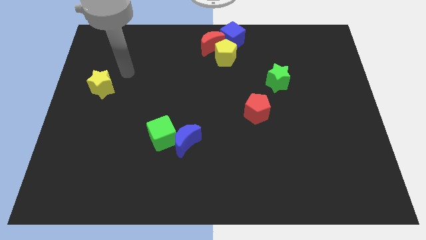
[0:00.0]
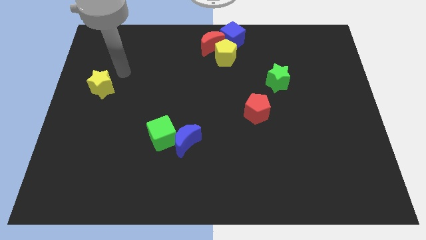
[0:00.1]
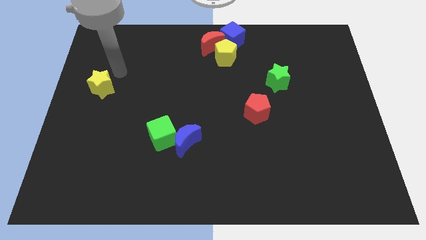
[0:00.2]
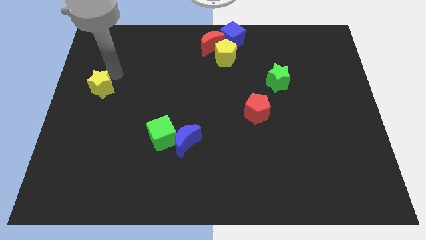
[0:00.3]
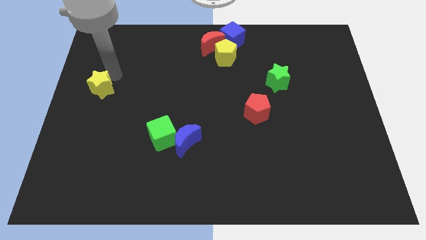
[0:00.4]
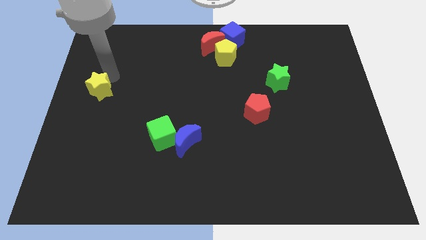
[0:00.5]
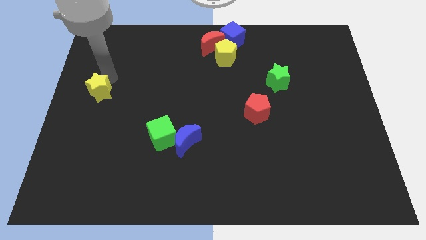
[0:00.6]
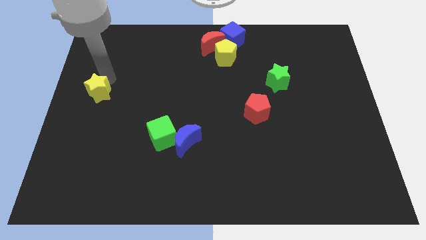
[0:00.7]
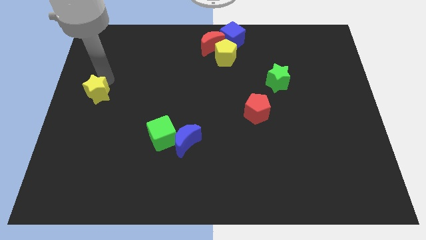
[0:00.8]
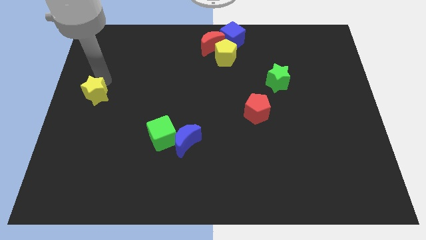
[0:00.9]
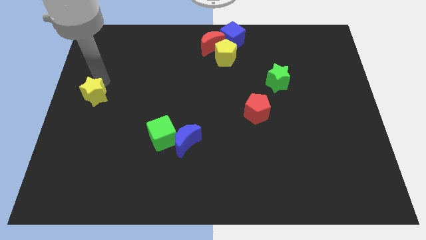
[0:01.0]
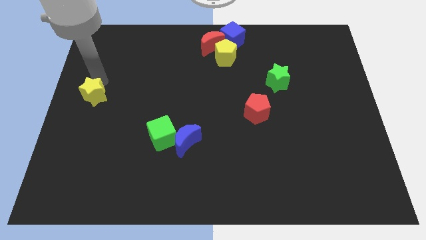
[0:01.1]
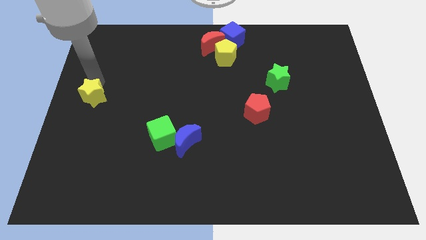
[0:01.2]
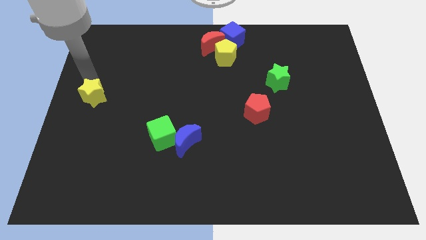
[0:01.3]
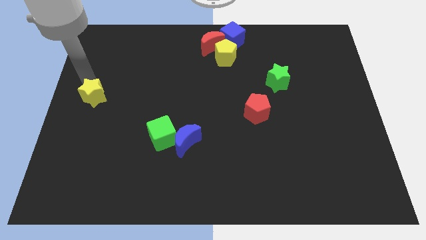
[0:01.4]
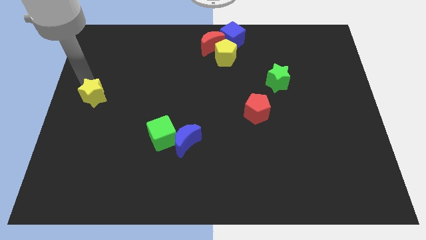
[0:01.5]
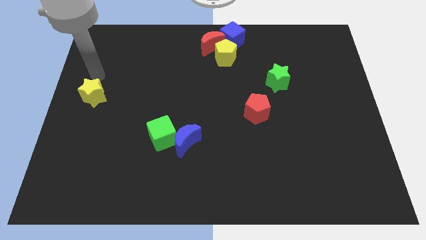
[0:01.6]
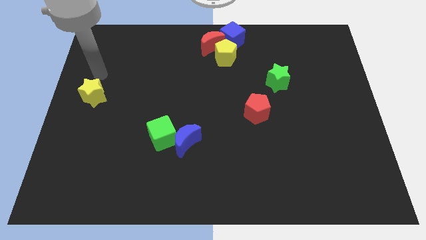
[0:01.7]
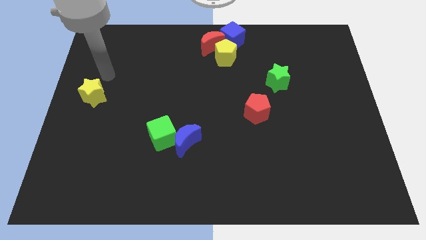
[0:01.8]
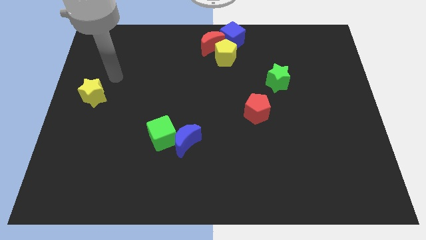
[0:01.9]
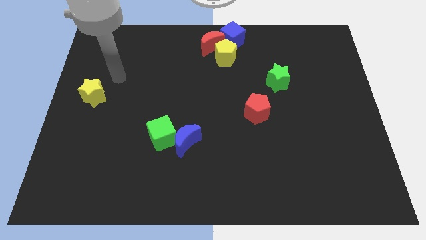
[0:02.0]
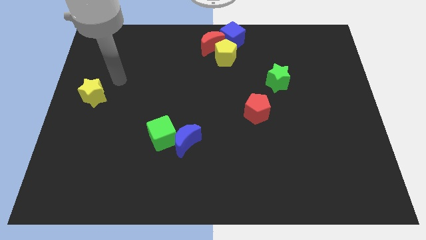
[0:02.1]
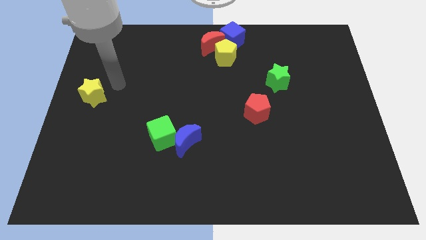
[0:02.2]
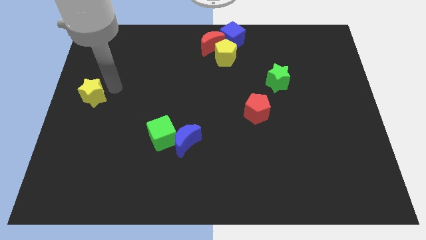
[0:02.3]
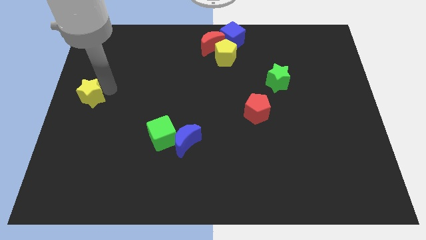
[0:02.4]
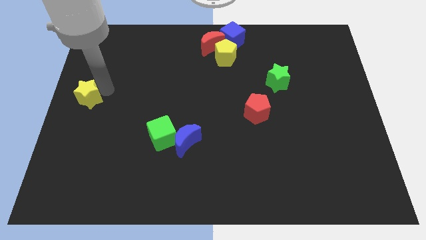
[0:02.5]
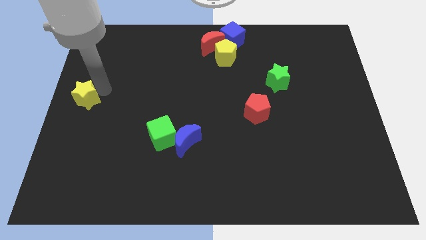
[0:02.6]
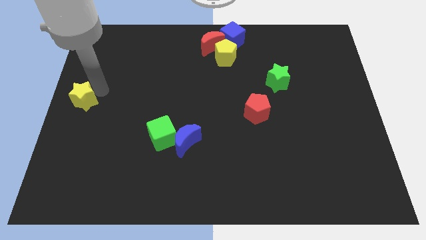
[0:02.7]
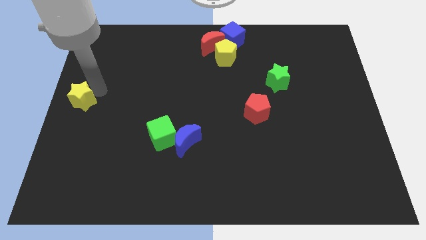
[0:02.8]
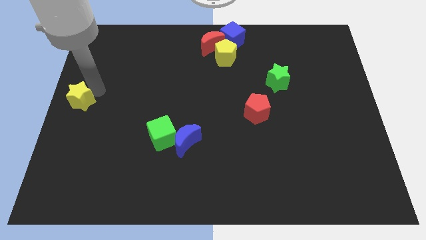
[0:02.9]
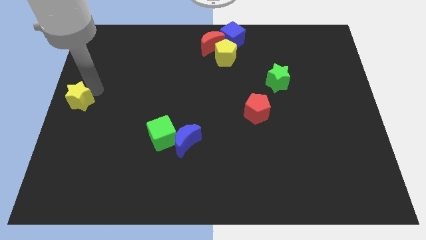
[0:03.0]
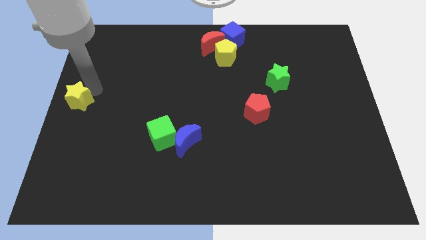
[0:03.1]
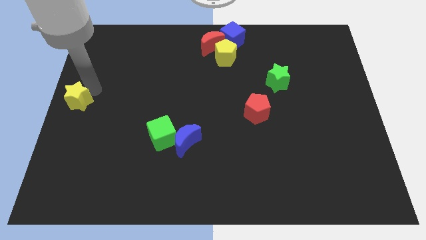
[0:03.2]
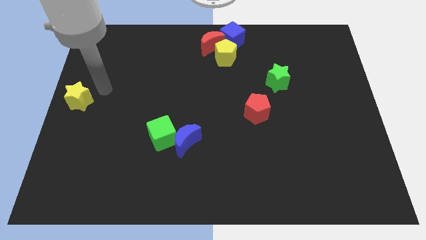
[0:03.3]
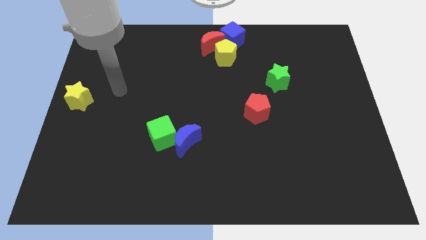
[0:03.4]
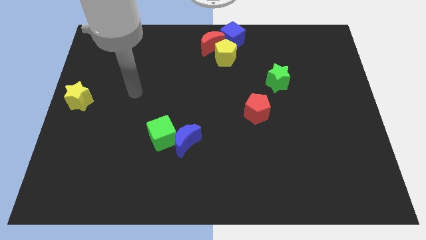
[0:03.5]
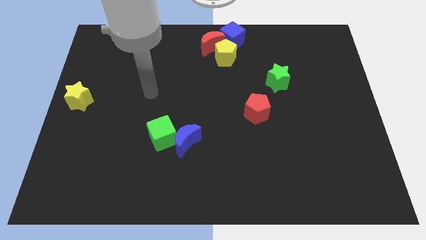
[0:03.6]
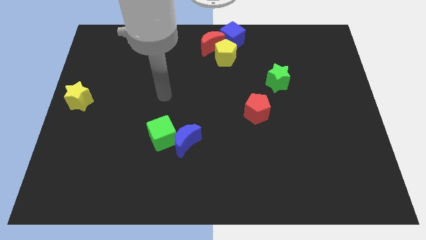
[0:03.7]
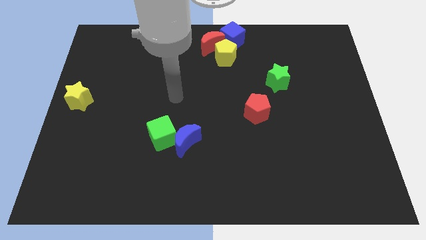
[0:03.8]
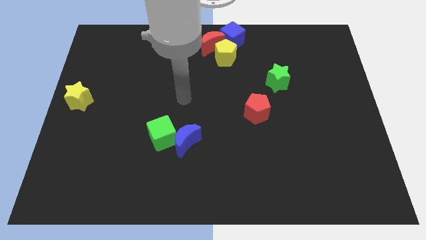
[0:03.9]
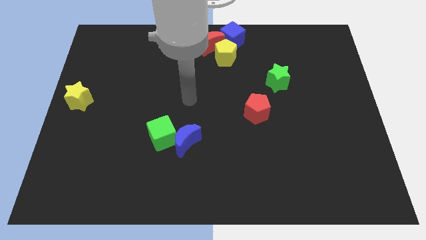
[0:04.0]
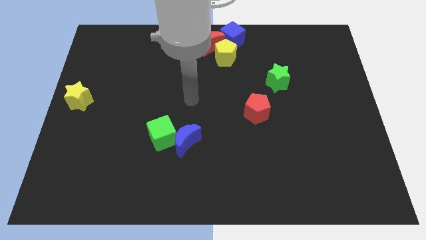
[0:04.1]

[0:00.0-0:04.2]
move the yellow star to the left center of the board

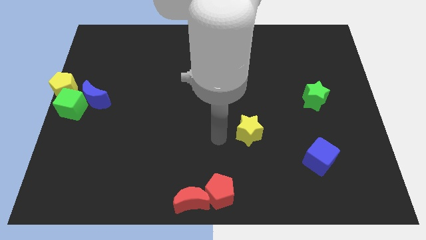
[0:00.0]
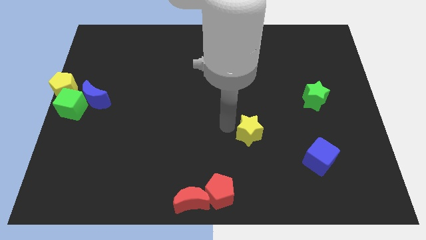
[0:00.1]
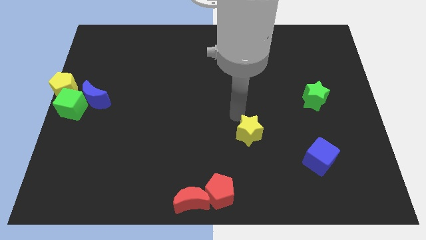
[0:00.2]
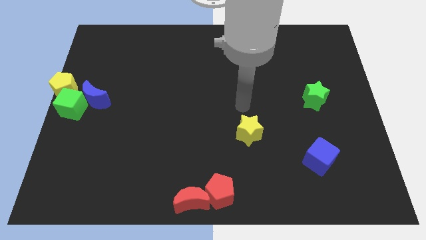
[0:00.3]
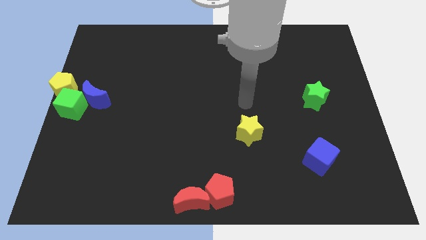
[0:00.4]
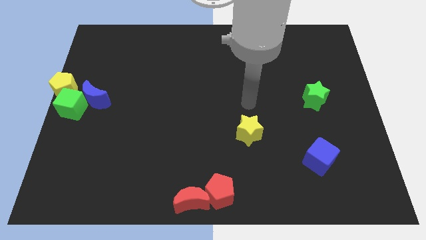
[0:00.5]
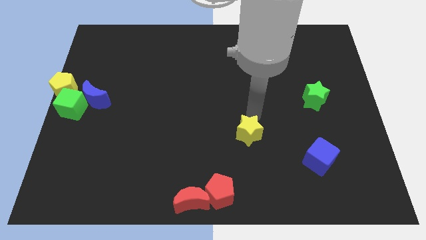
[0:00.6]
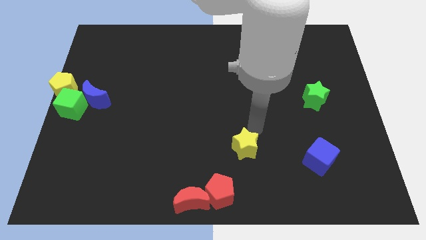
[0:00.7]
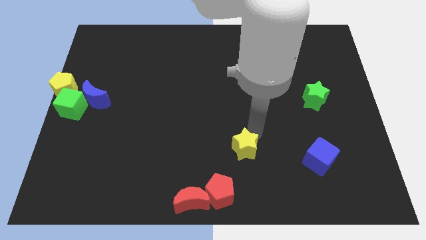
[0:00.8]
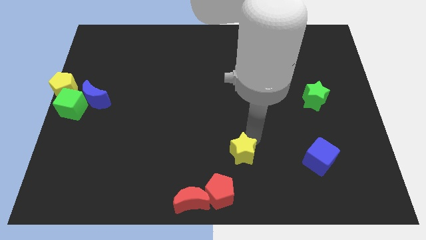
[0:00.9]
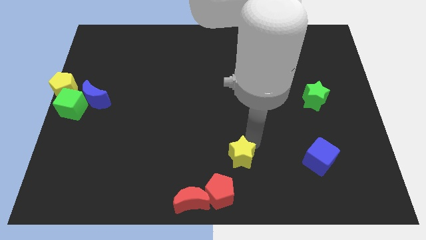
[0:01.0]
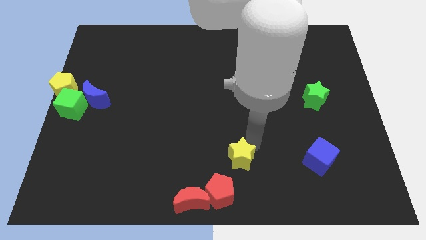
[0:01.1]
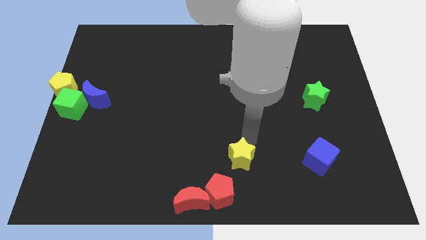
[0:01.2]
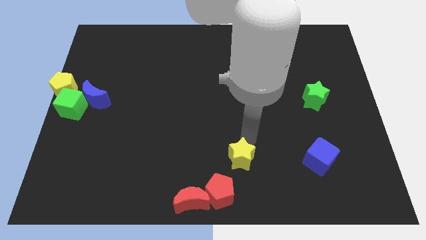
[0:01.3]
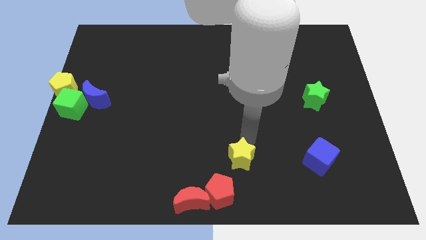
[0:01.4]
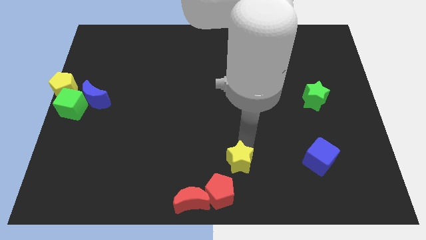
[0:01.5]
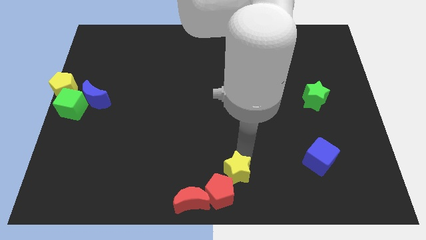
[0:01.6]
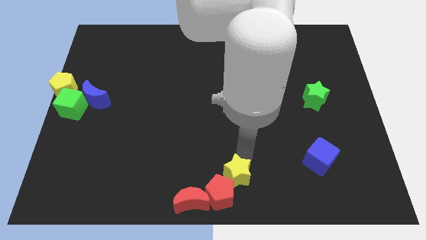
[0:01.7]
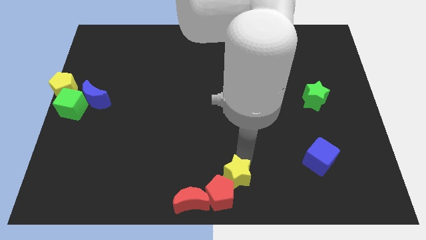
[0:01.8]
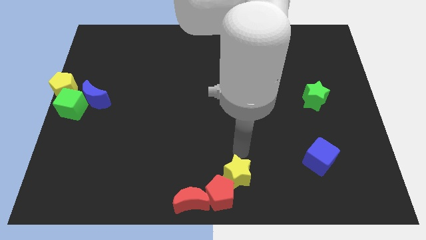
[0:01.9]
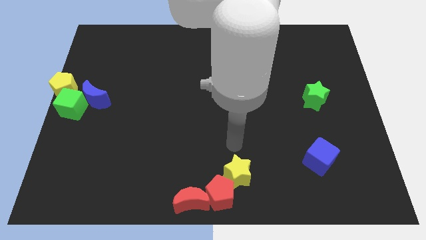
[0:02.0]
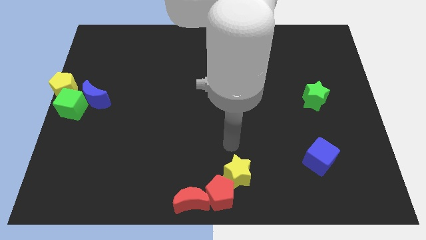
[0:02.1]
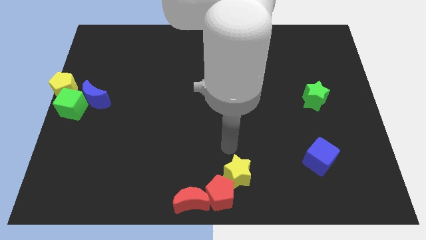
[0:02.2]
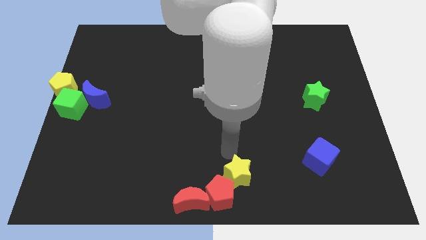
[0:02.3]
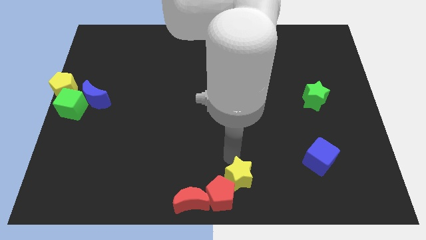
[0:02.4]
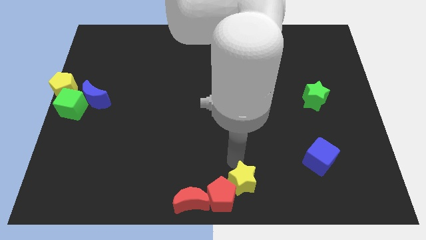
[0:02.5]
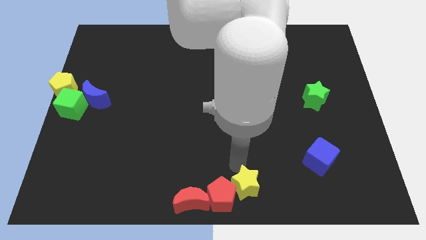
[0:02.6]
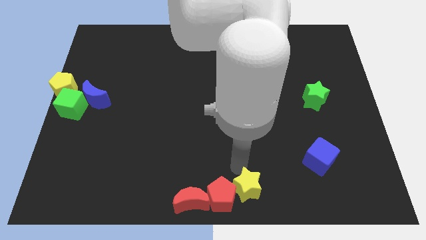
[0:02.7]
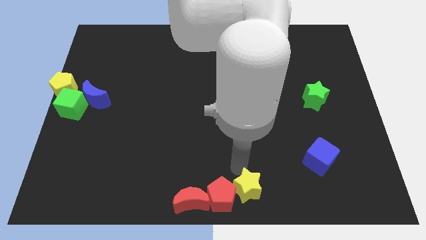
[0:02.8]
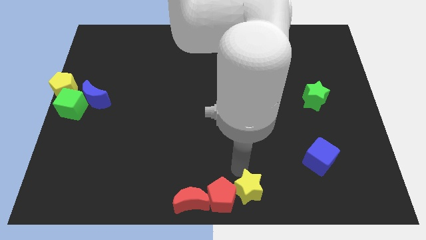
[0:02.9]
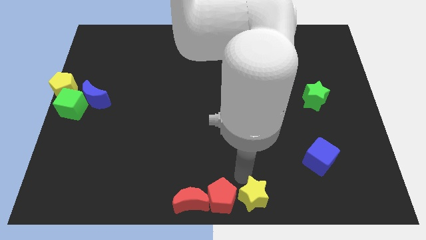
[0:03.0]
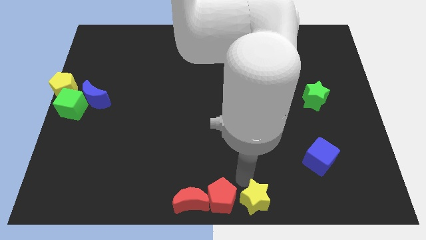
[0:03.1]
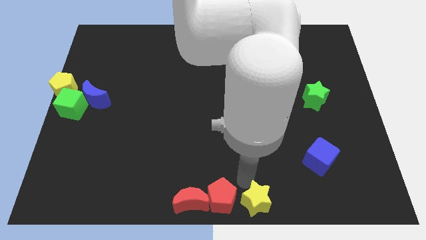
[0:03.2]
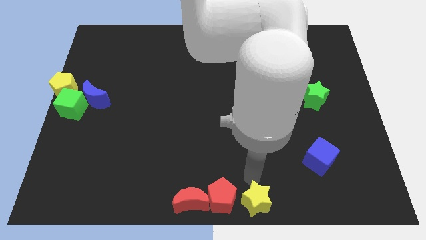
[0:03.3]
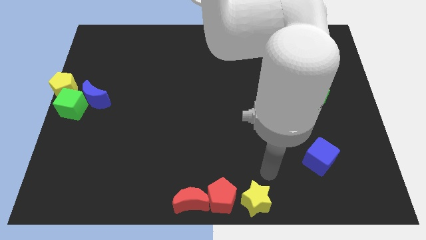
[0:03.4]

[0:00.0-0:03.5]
place yellow star to the right of red pentagon

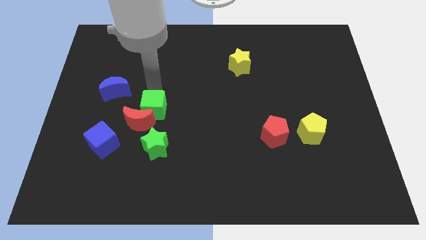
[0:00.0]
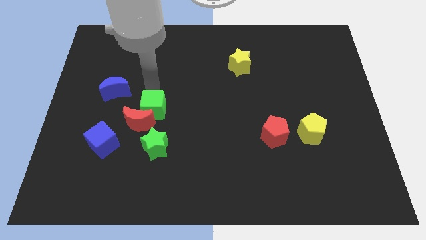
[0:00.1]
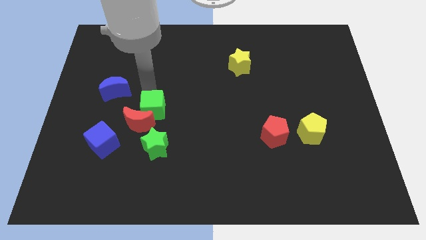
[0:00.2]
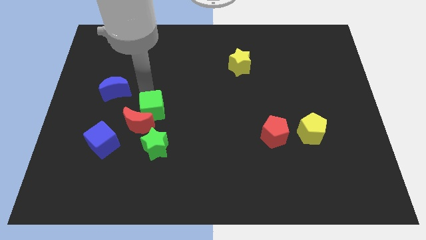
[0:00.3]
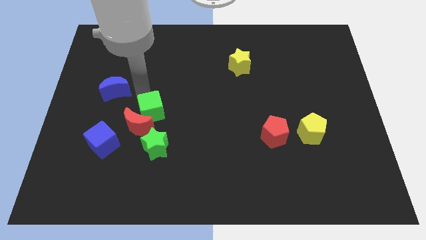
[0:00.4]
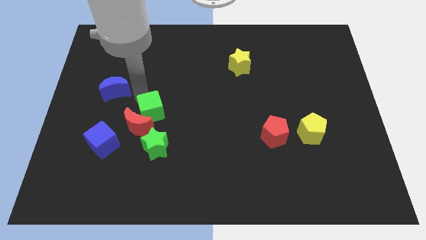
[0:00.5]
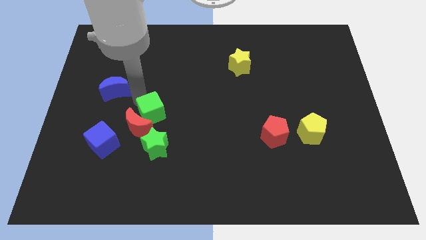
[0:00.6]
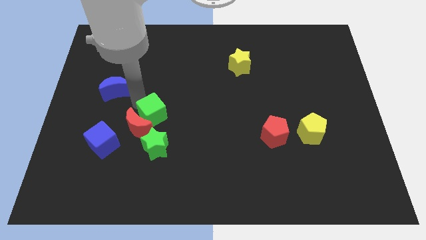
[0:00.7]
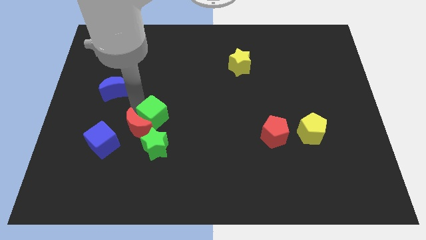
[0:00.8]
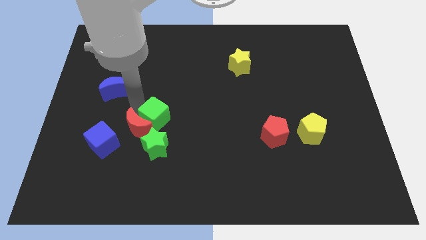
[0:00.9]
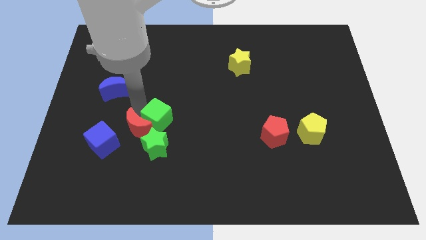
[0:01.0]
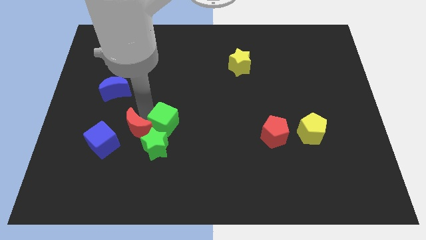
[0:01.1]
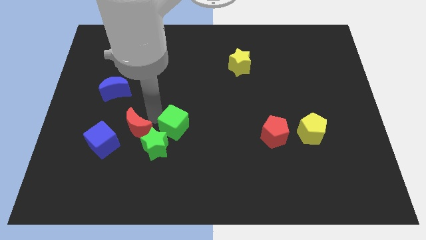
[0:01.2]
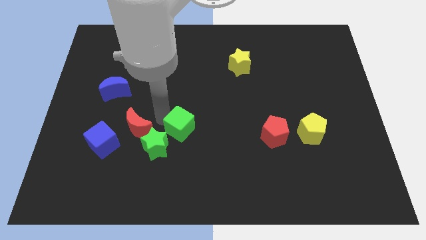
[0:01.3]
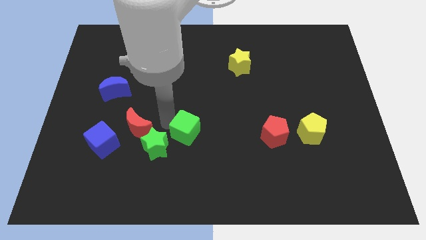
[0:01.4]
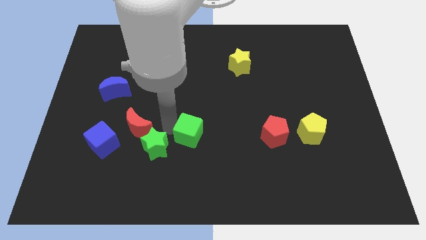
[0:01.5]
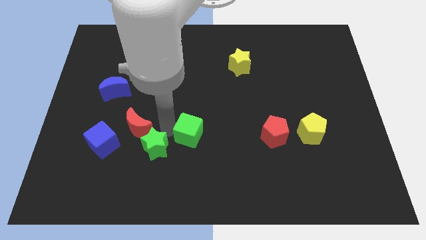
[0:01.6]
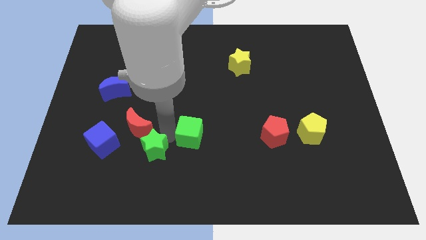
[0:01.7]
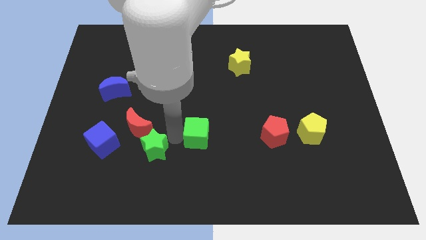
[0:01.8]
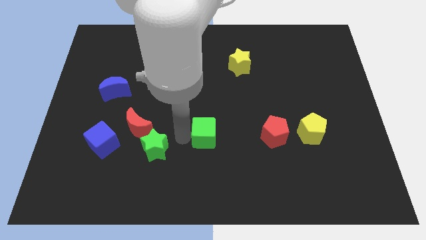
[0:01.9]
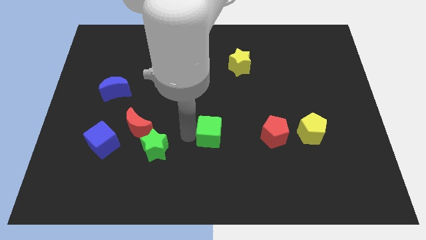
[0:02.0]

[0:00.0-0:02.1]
place the green cube to the top right of the green star
